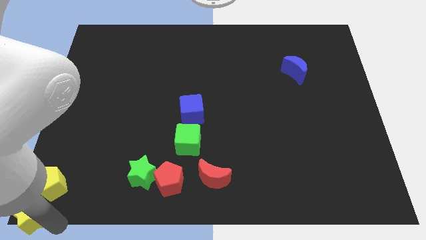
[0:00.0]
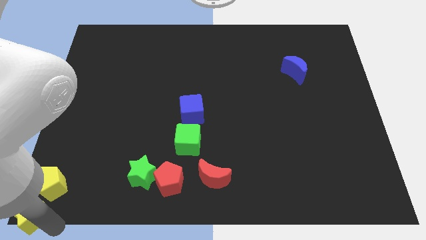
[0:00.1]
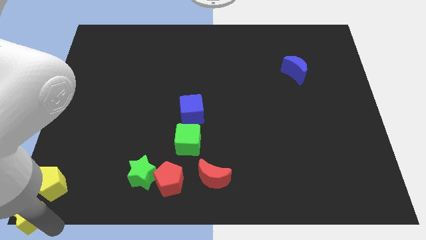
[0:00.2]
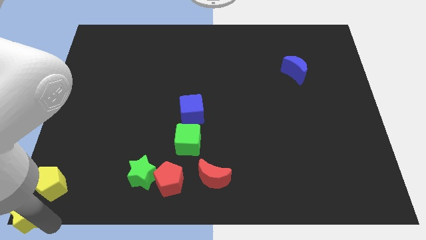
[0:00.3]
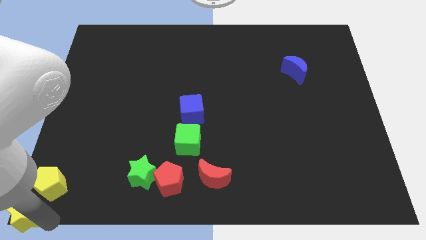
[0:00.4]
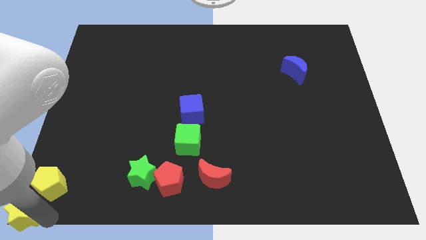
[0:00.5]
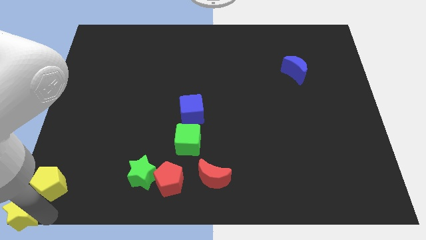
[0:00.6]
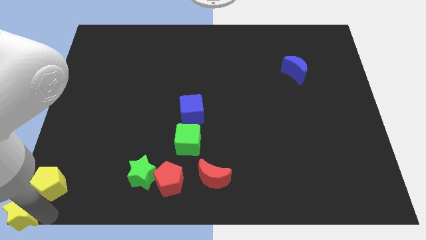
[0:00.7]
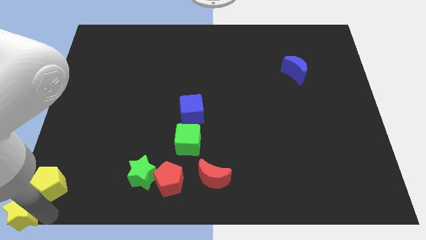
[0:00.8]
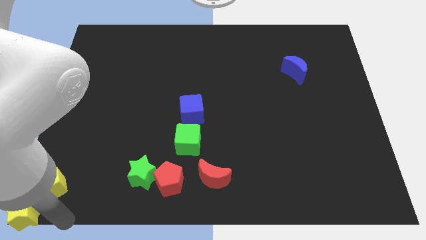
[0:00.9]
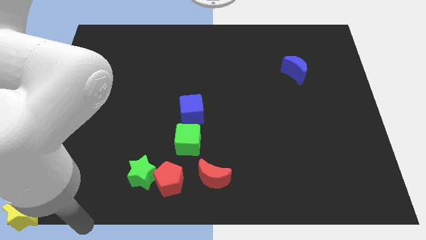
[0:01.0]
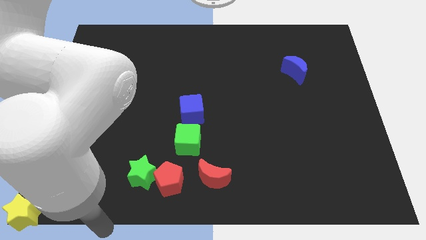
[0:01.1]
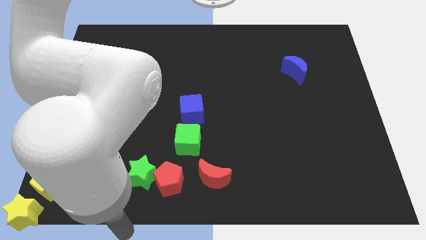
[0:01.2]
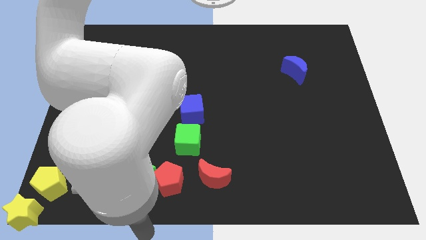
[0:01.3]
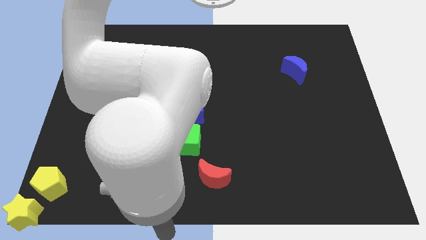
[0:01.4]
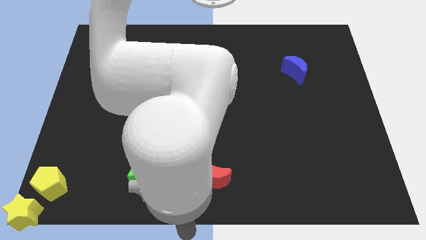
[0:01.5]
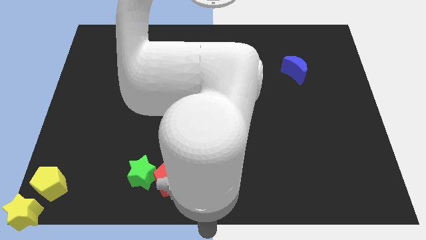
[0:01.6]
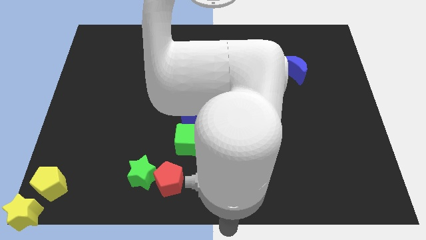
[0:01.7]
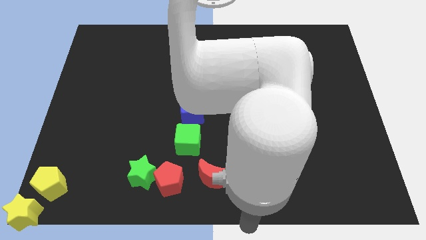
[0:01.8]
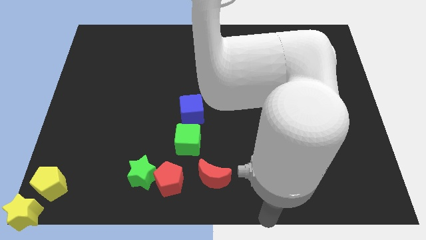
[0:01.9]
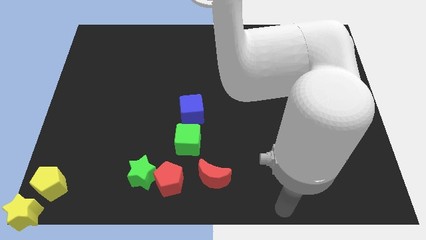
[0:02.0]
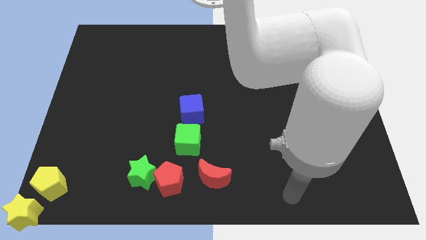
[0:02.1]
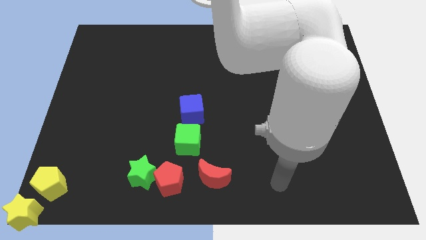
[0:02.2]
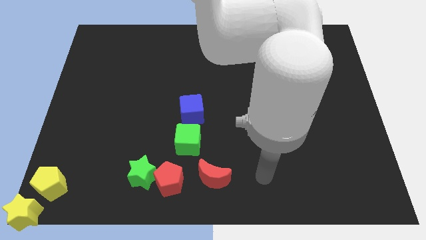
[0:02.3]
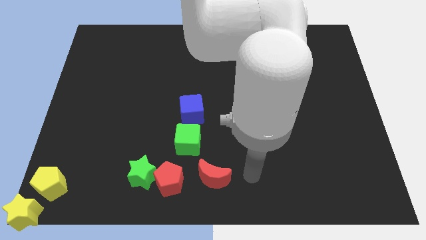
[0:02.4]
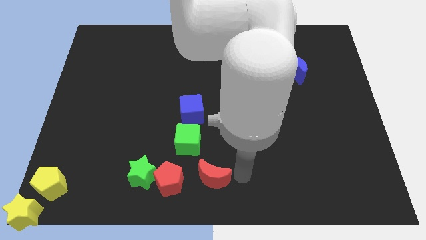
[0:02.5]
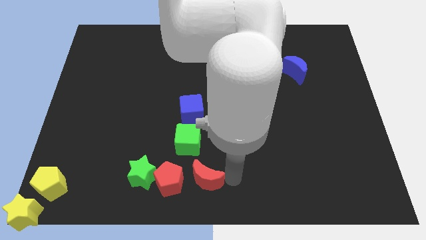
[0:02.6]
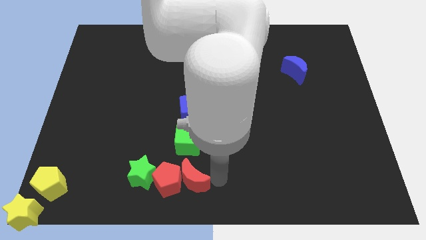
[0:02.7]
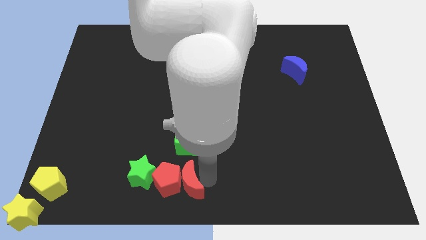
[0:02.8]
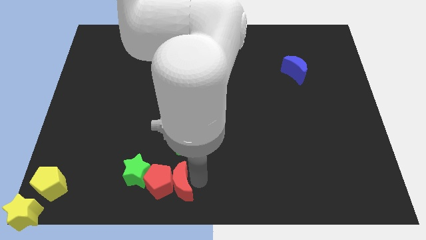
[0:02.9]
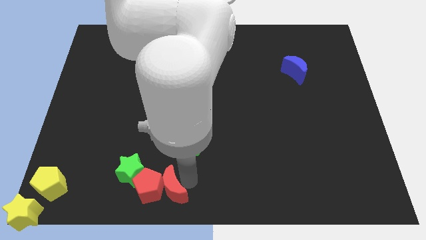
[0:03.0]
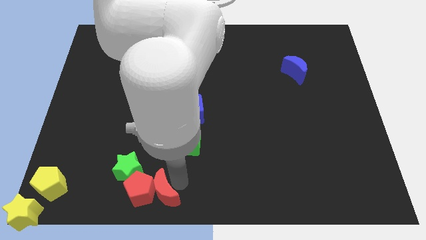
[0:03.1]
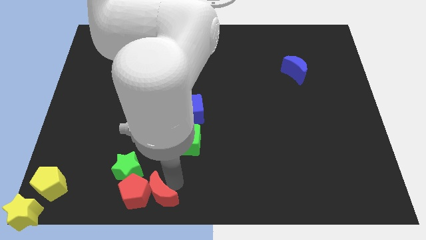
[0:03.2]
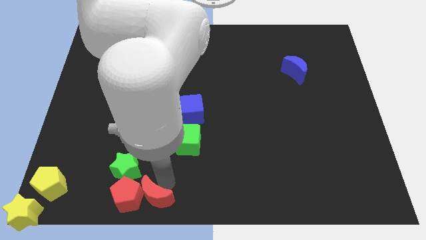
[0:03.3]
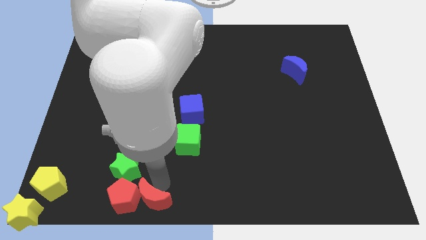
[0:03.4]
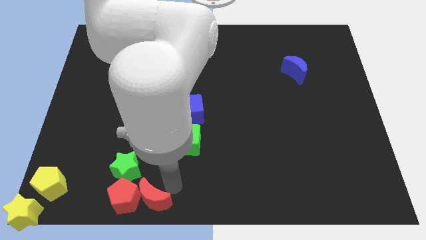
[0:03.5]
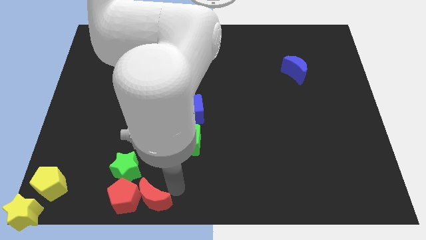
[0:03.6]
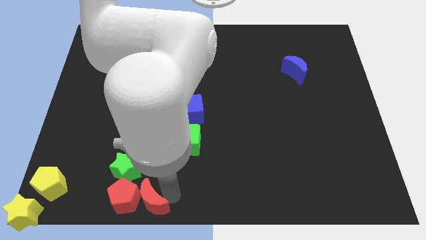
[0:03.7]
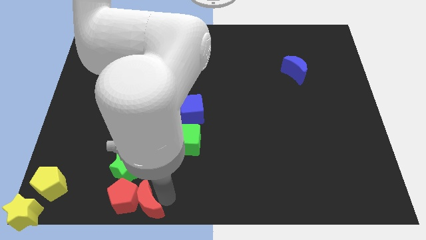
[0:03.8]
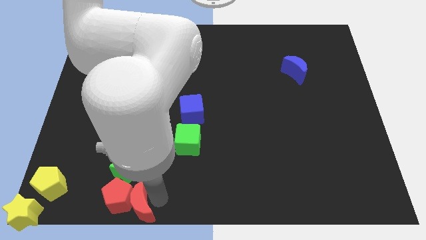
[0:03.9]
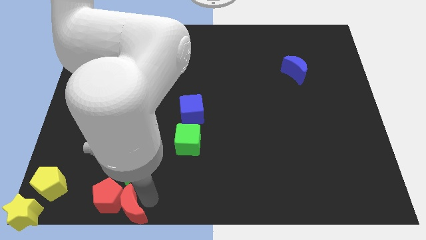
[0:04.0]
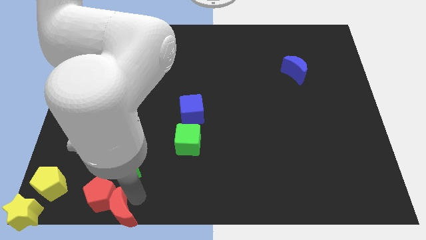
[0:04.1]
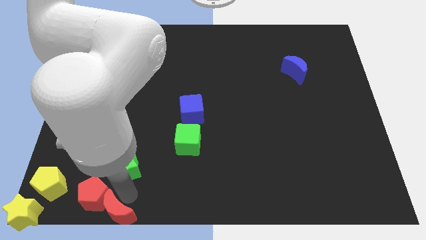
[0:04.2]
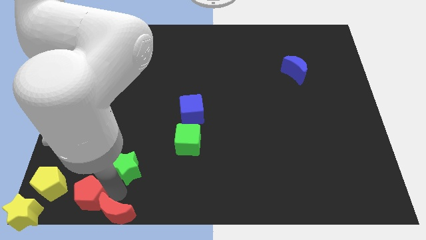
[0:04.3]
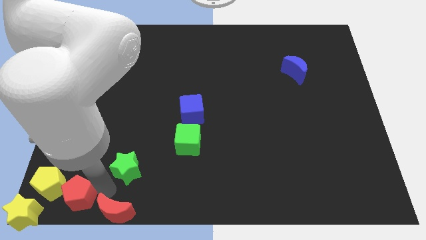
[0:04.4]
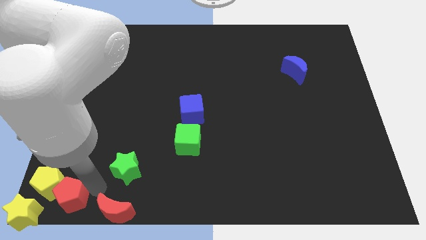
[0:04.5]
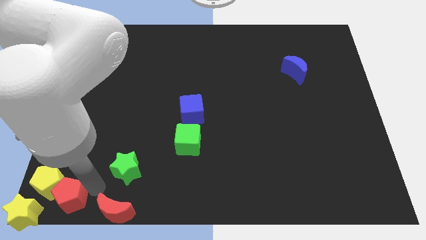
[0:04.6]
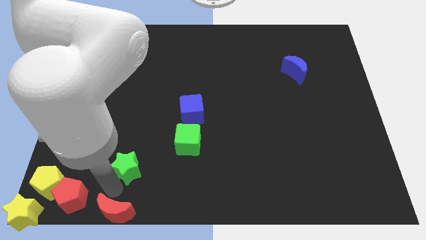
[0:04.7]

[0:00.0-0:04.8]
push the red pentagon into the yellow pentagon

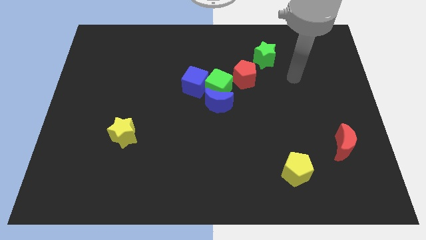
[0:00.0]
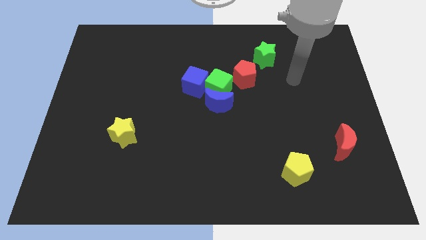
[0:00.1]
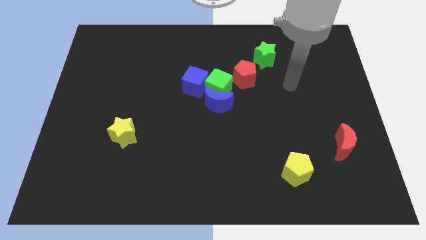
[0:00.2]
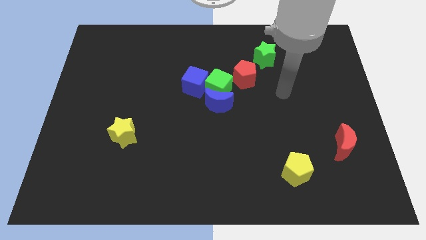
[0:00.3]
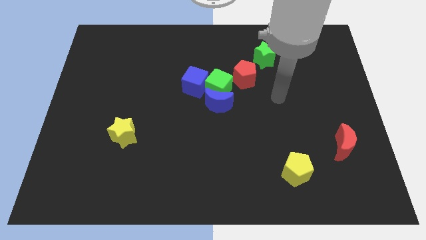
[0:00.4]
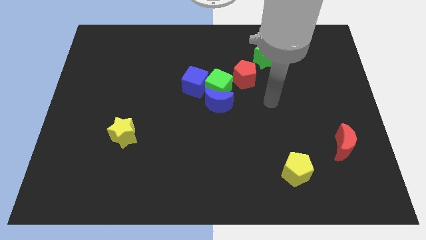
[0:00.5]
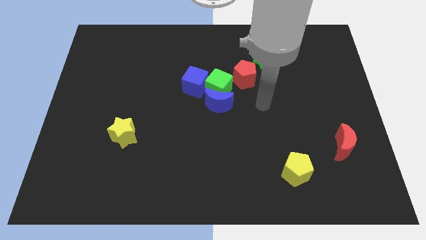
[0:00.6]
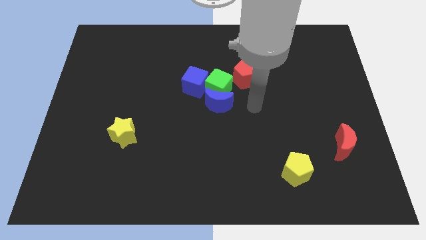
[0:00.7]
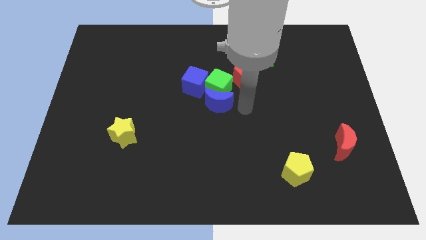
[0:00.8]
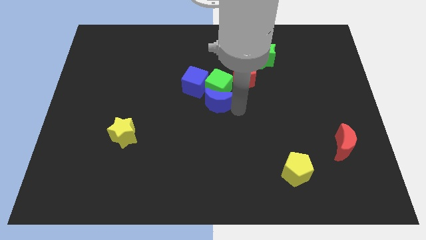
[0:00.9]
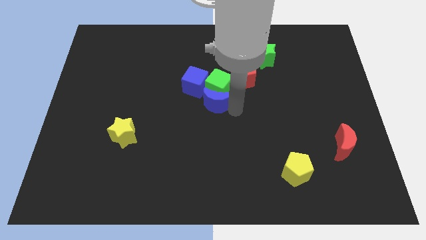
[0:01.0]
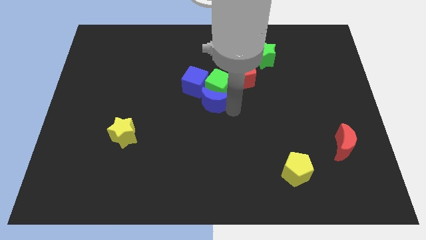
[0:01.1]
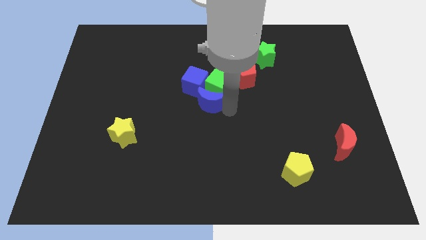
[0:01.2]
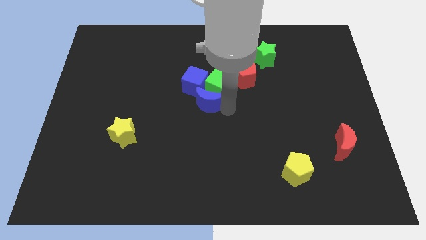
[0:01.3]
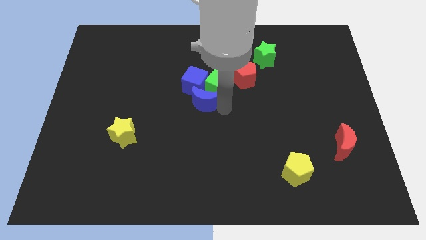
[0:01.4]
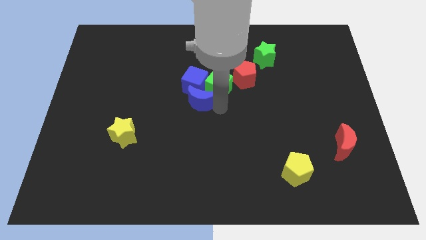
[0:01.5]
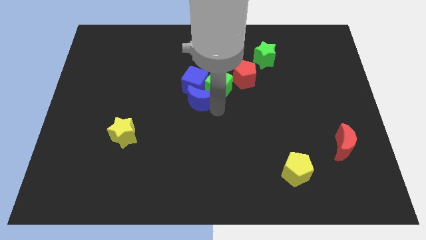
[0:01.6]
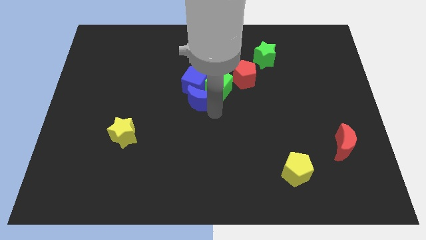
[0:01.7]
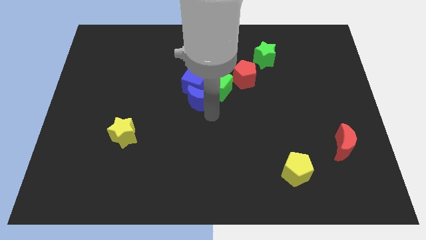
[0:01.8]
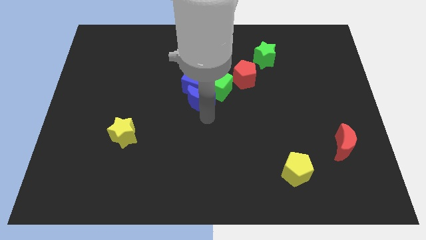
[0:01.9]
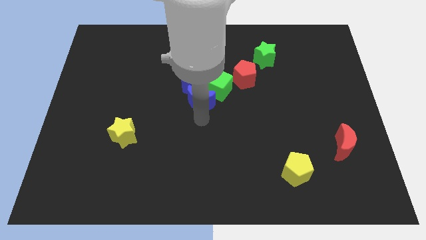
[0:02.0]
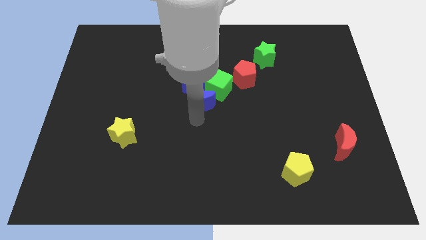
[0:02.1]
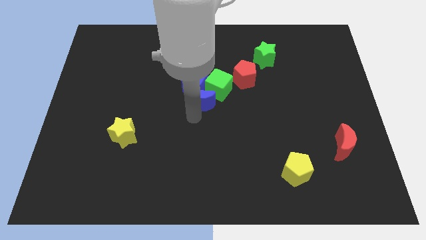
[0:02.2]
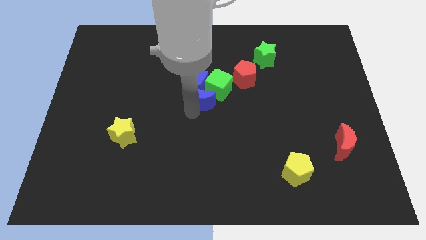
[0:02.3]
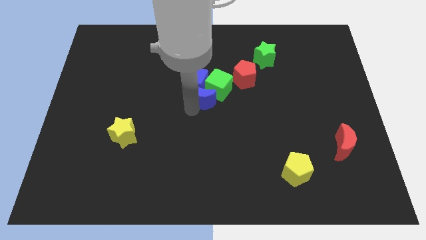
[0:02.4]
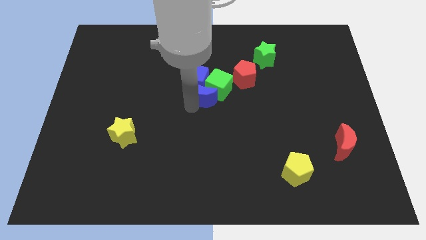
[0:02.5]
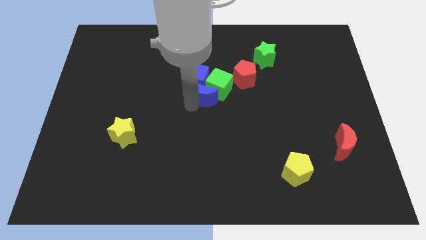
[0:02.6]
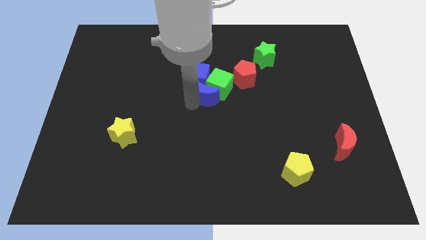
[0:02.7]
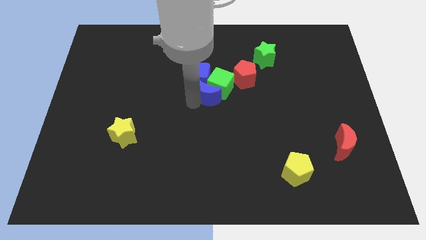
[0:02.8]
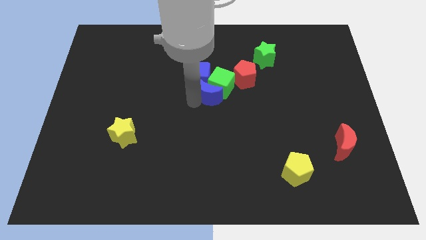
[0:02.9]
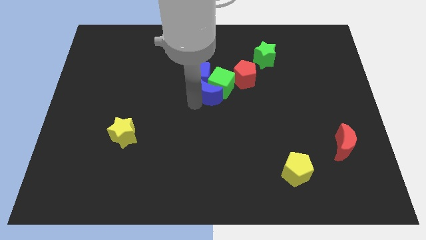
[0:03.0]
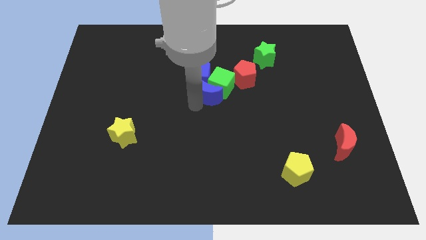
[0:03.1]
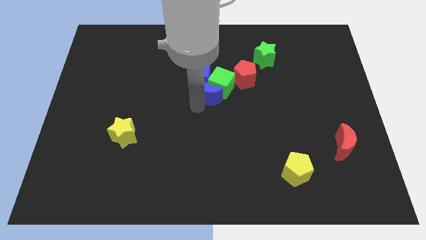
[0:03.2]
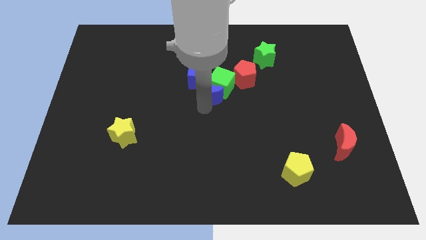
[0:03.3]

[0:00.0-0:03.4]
push blue crescent in to green cube

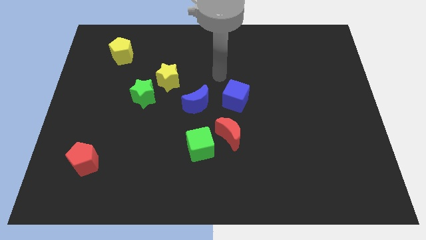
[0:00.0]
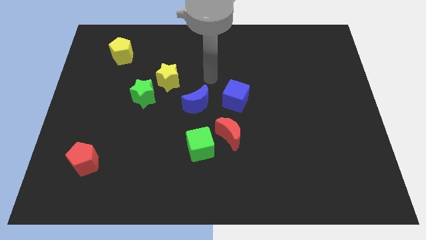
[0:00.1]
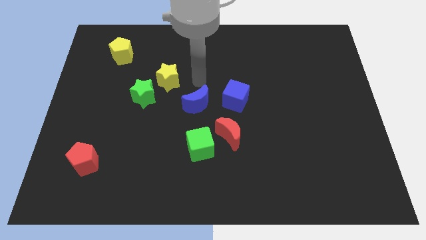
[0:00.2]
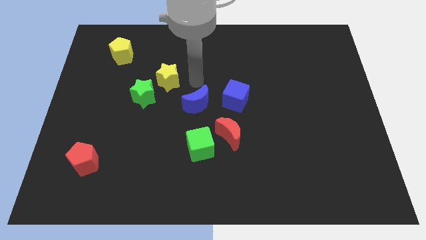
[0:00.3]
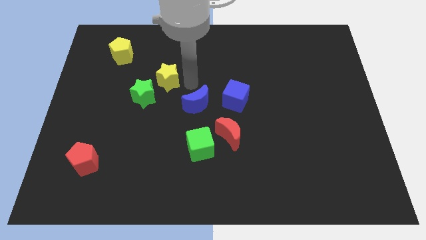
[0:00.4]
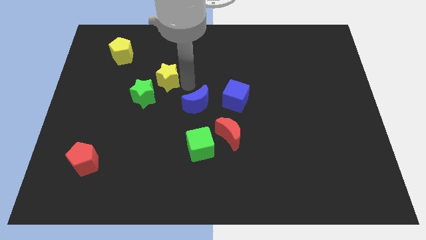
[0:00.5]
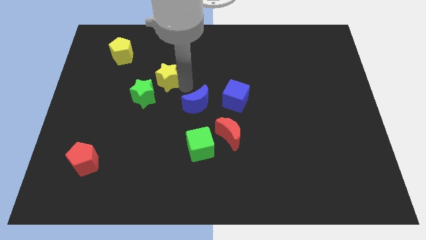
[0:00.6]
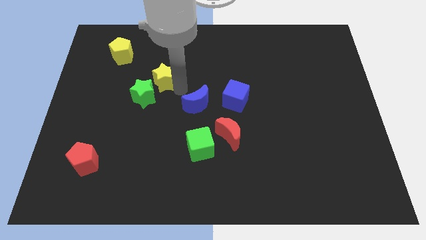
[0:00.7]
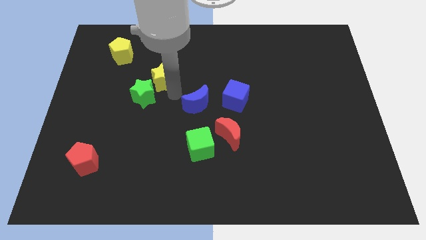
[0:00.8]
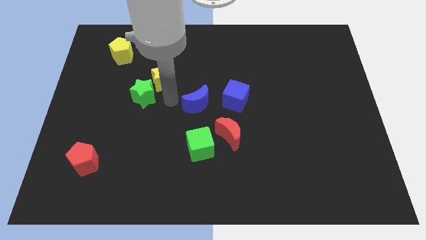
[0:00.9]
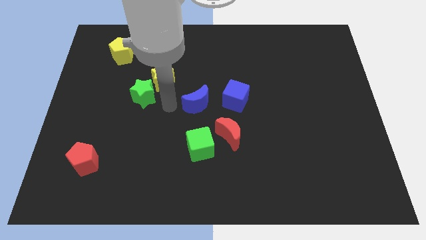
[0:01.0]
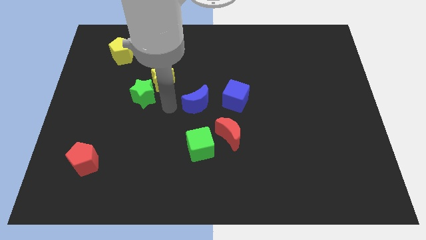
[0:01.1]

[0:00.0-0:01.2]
push the yellow star to the top right side of the green star
